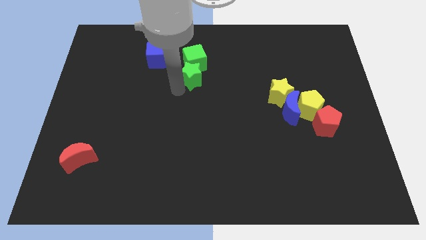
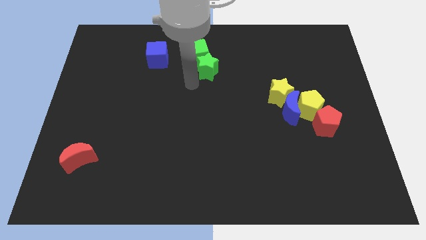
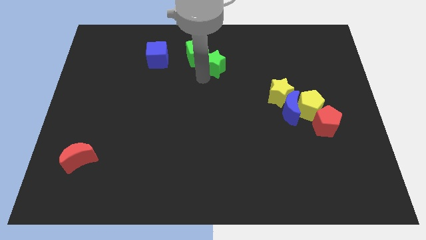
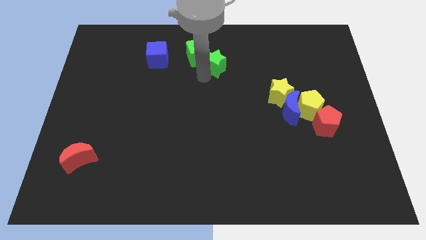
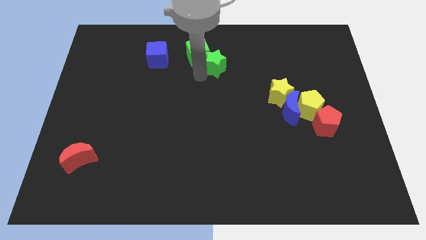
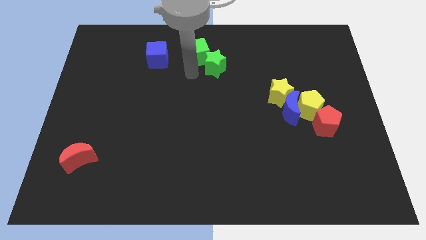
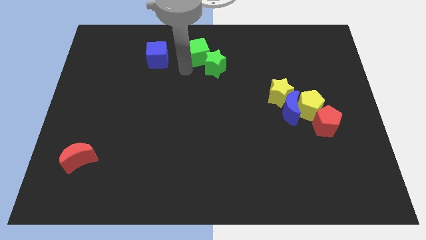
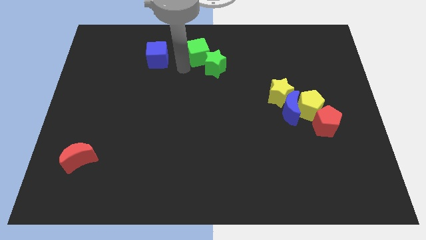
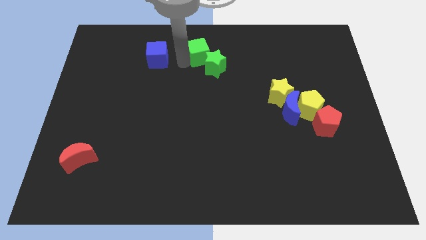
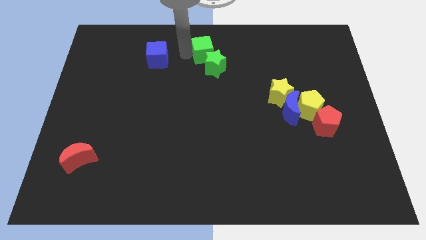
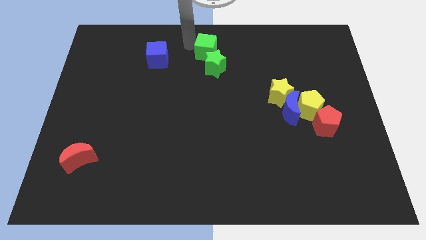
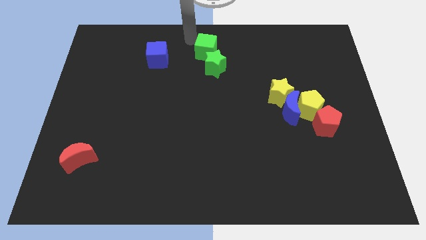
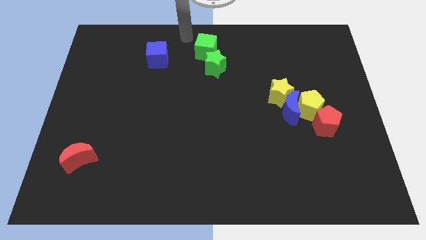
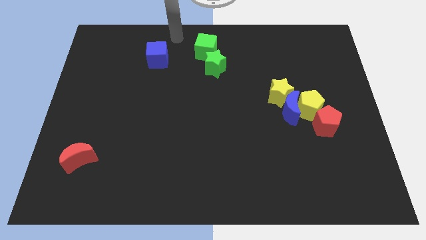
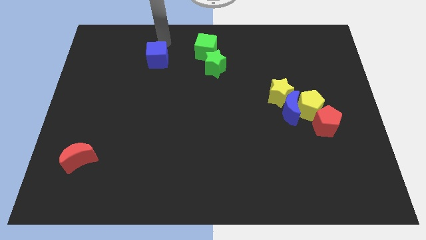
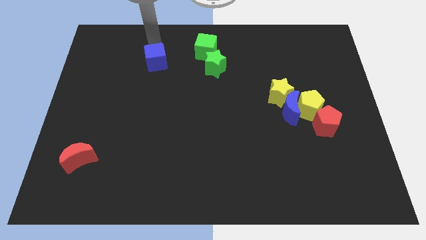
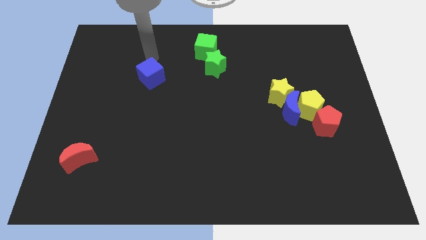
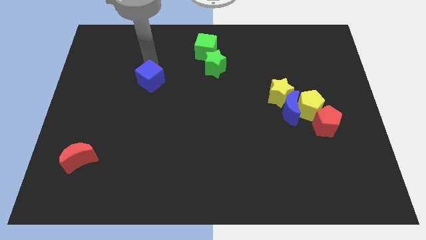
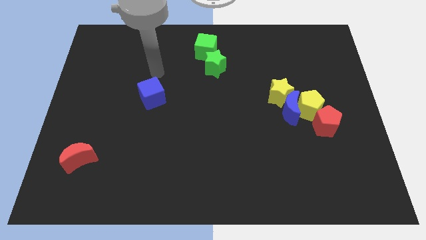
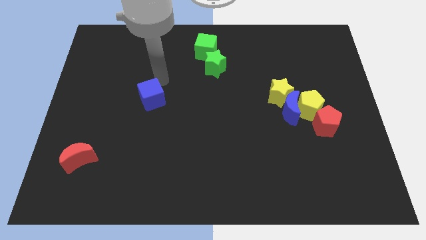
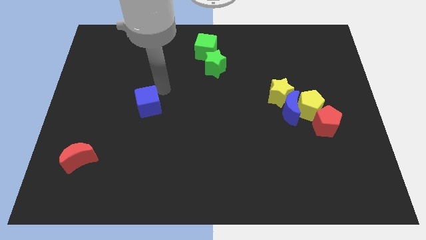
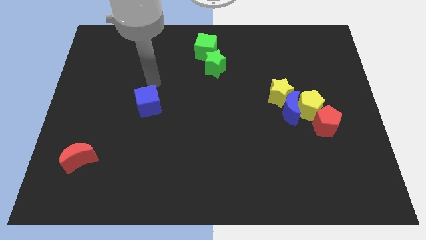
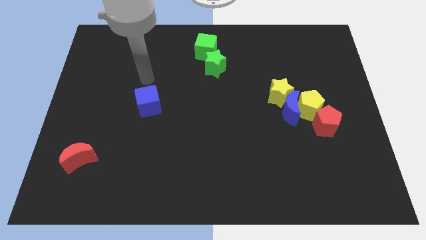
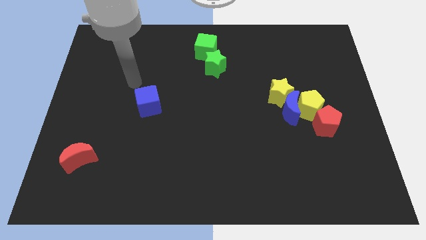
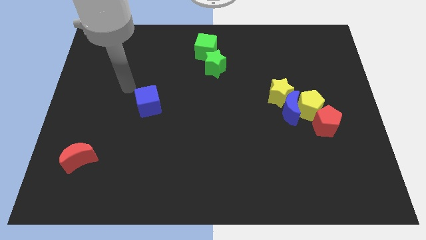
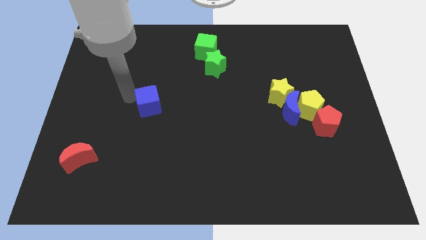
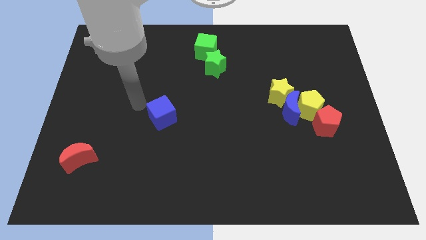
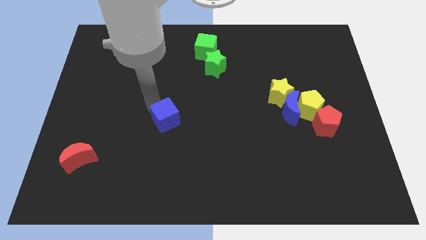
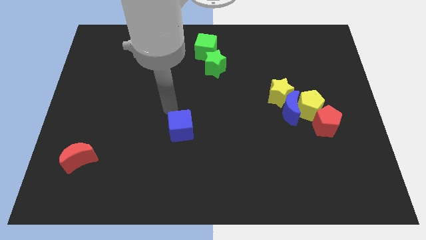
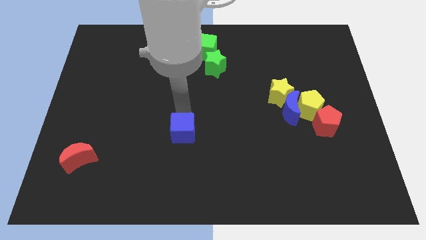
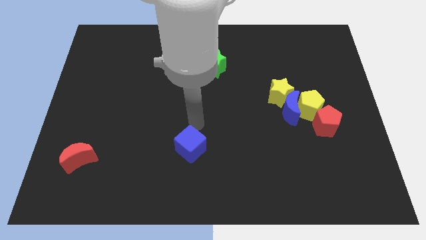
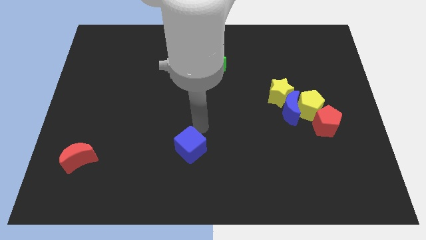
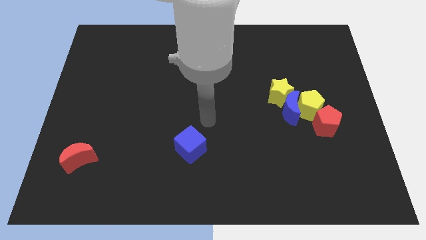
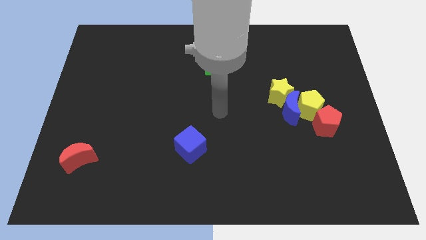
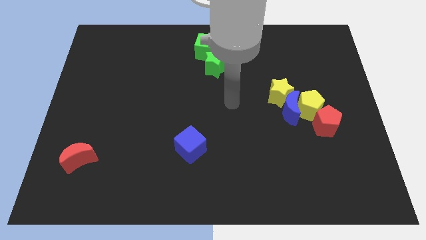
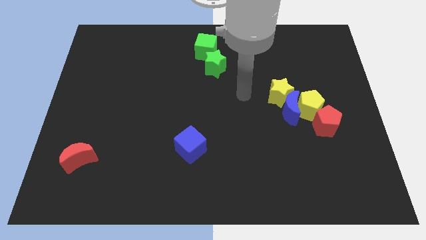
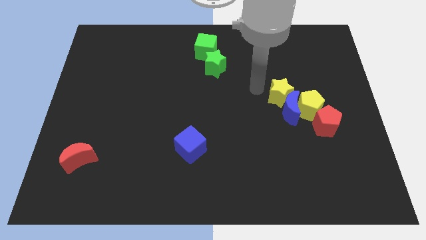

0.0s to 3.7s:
slide the blue cube diagonally to the bottom left of the yellow star

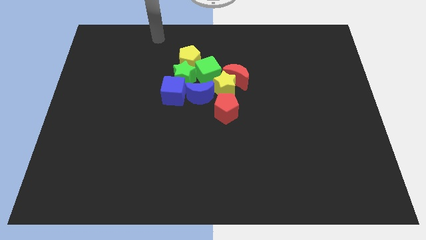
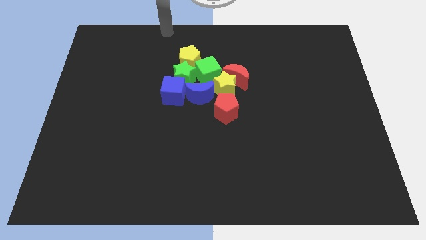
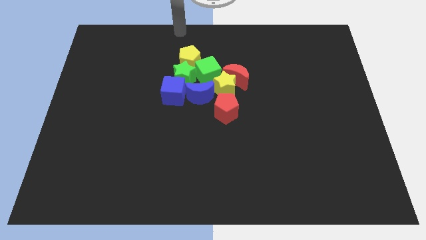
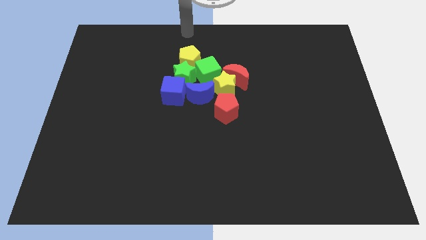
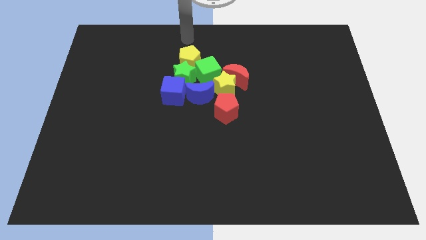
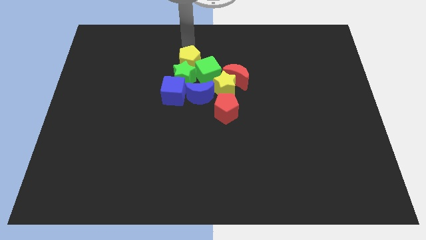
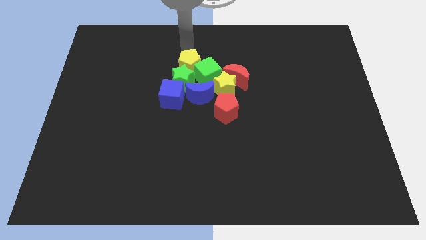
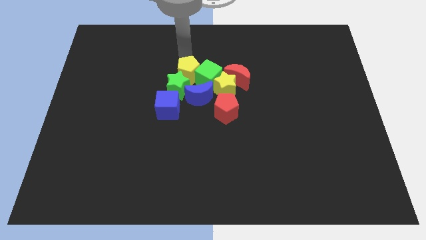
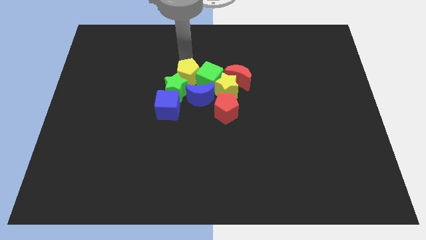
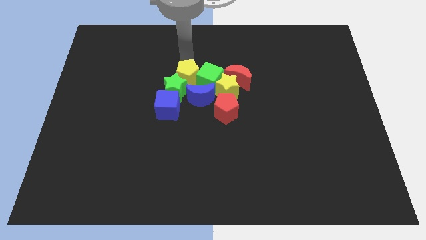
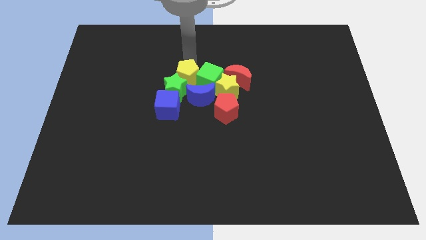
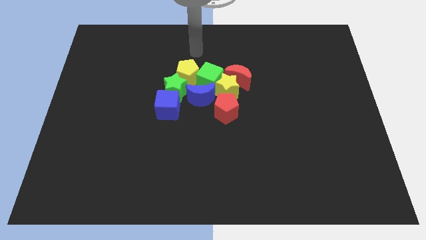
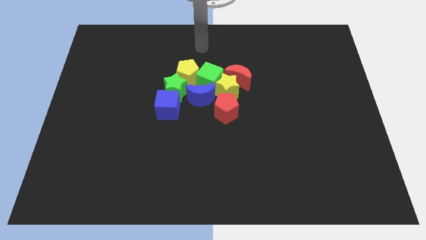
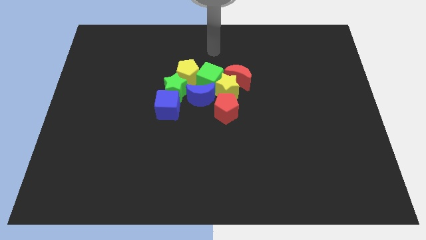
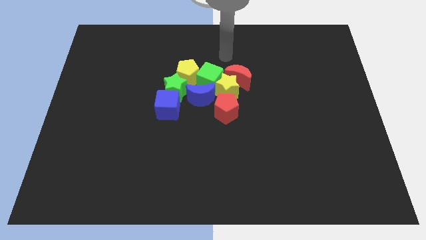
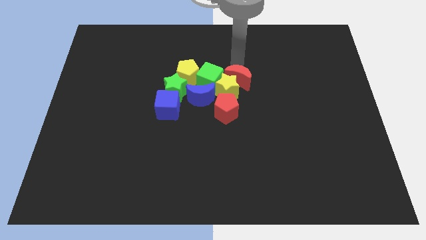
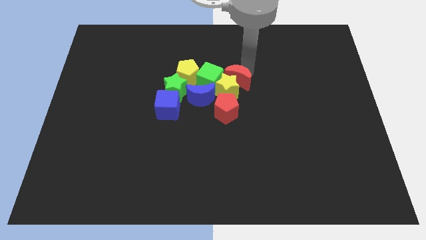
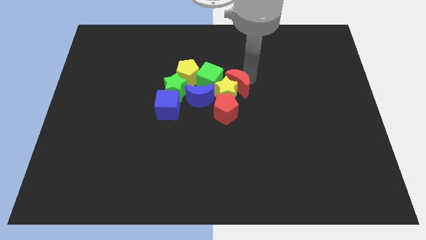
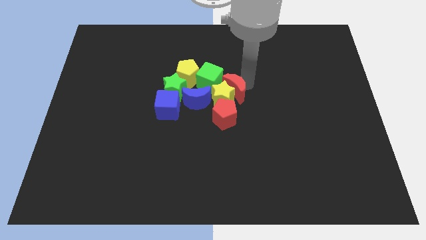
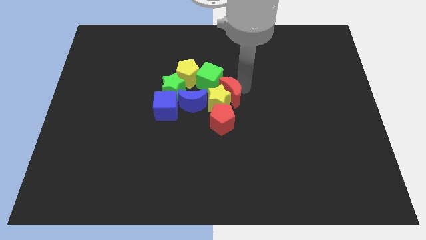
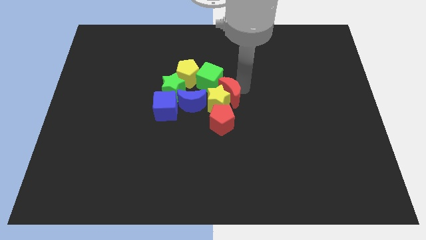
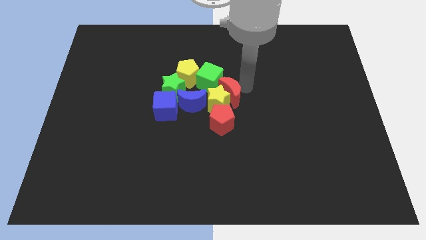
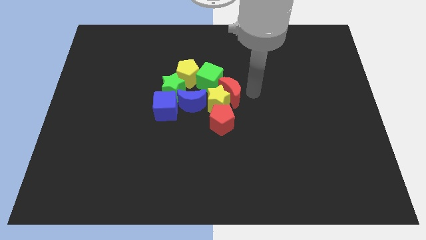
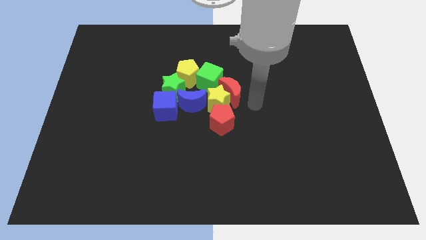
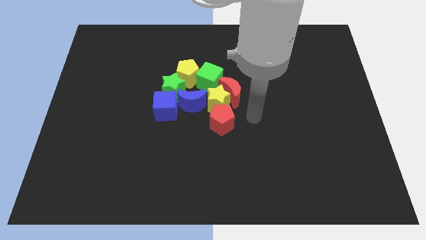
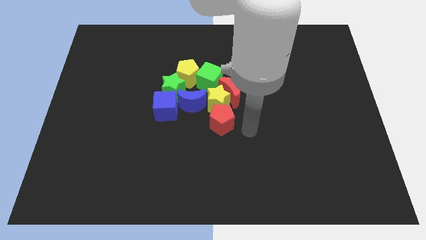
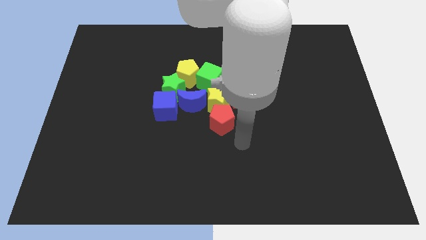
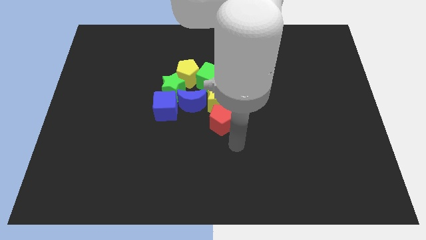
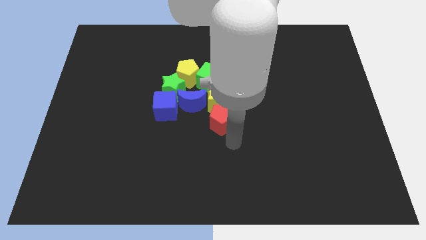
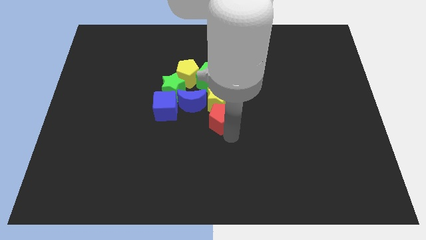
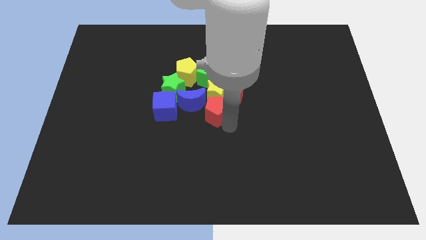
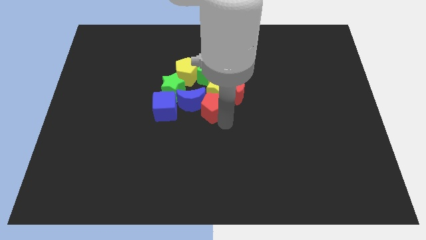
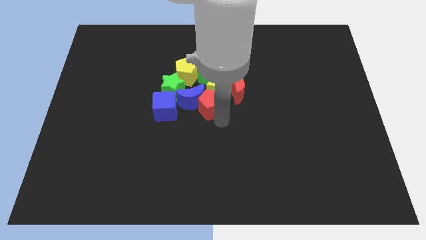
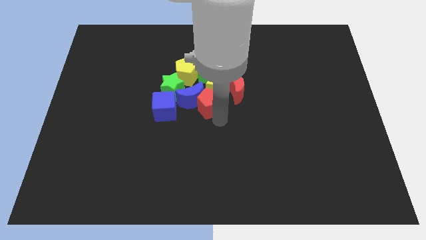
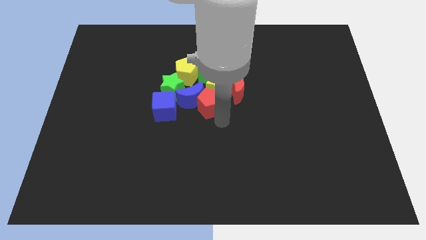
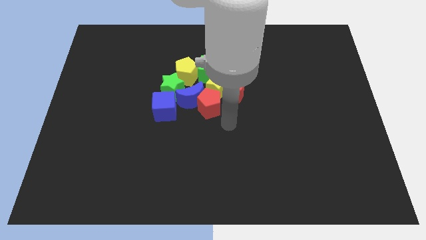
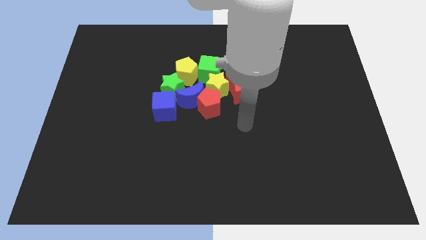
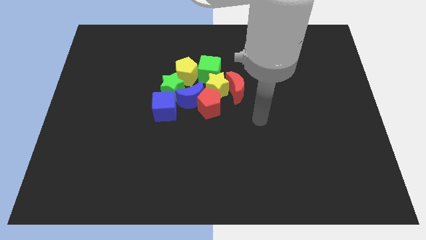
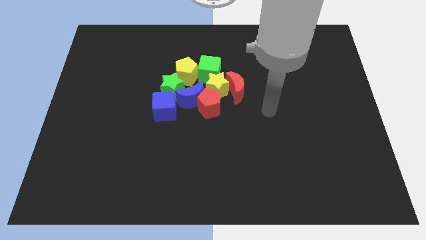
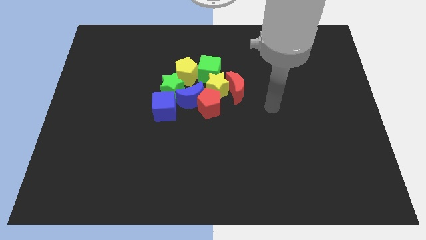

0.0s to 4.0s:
push the yellow pentagon red moon and the red pentagon into the group of blocks

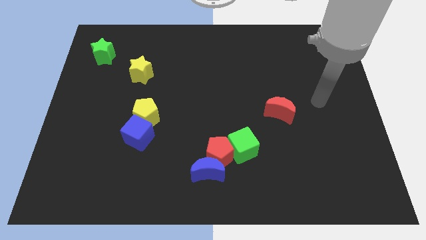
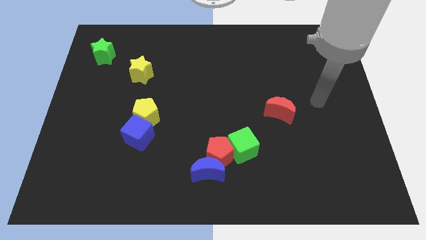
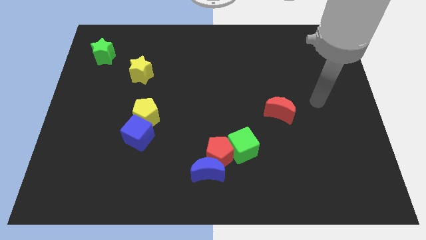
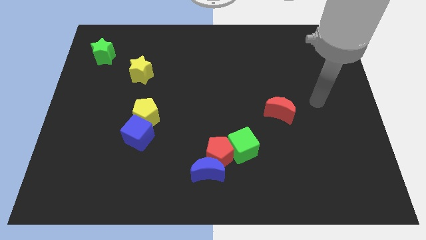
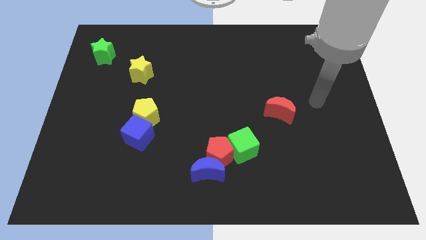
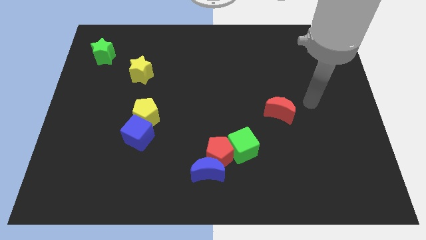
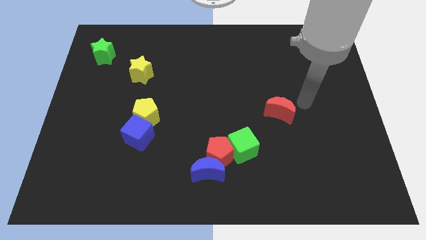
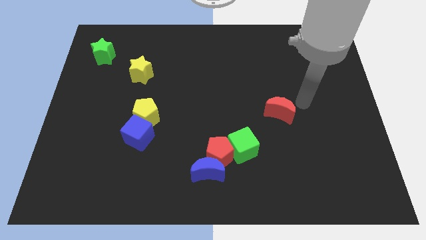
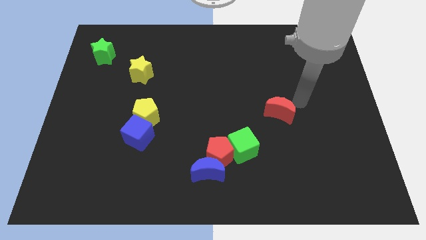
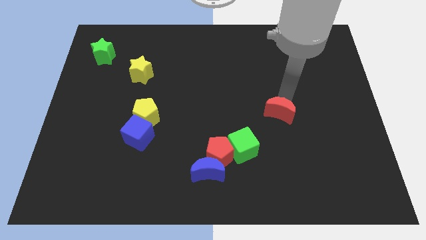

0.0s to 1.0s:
move your arm above red crescent

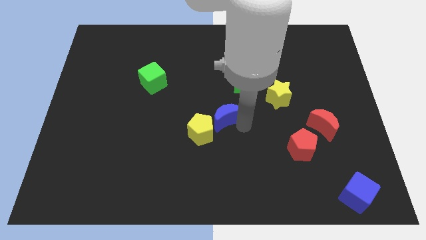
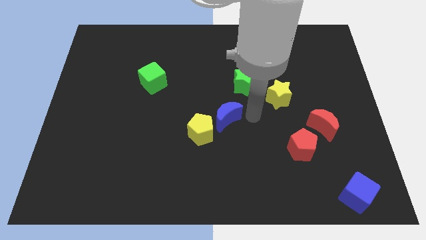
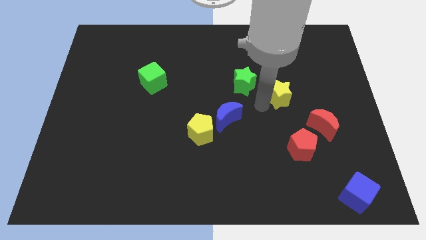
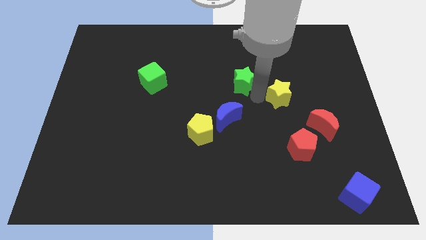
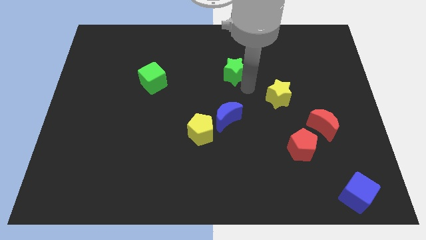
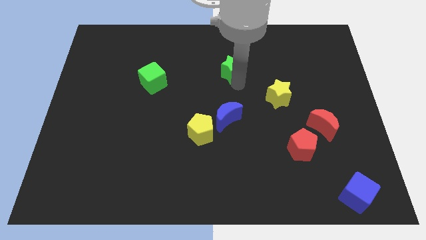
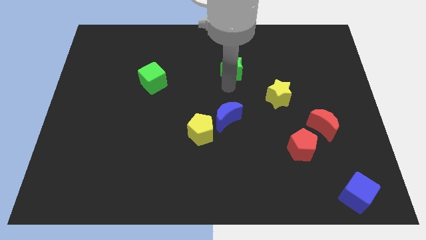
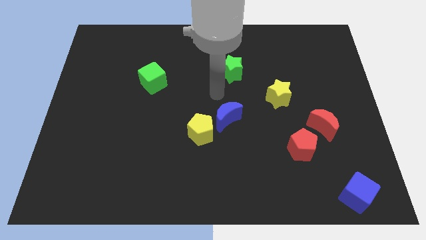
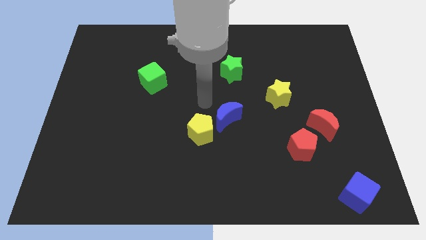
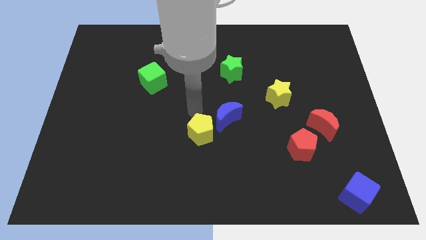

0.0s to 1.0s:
push the green star towards the top center
